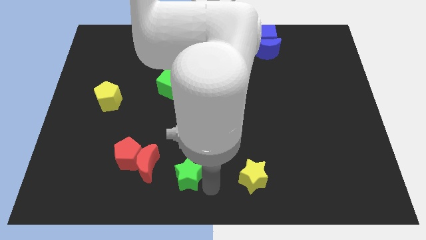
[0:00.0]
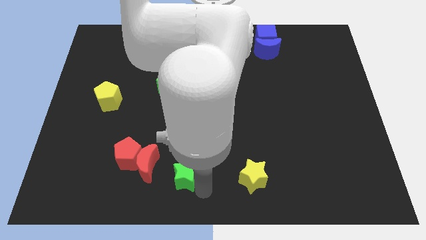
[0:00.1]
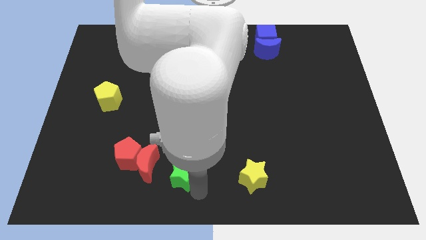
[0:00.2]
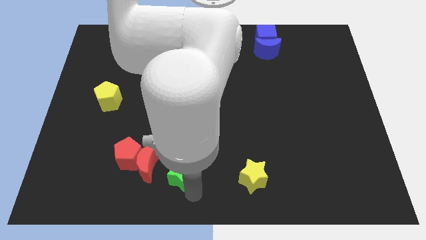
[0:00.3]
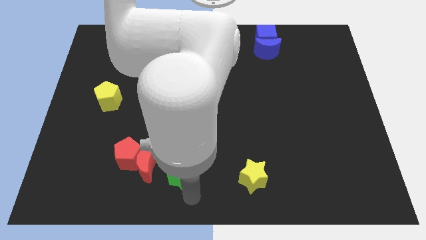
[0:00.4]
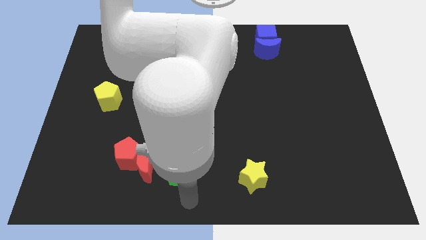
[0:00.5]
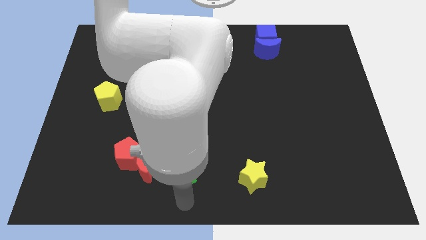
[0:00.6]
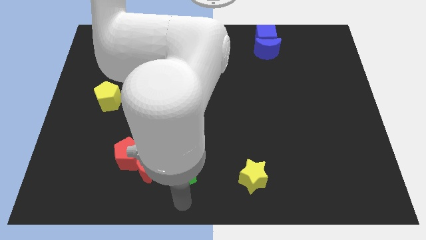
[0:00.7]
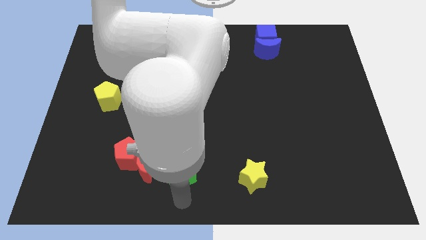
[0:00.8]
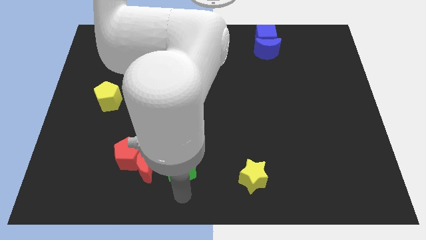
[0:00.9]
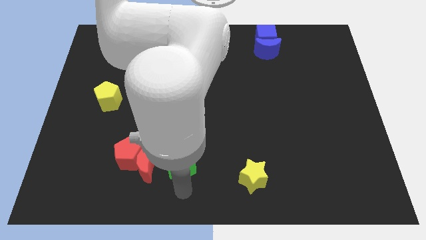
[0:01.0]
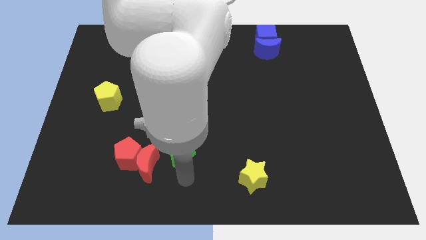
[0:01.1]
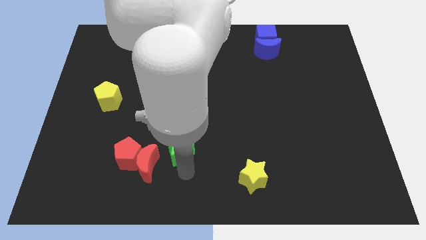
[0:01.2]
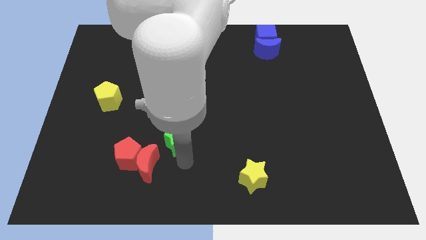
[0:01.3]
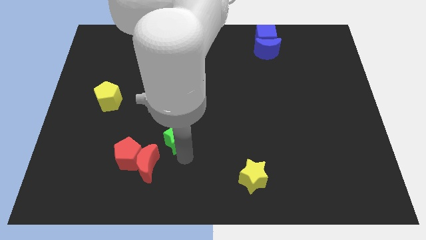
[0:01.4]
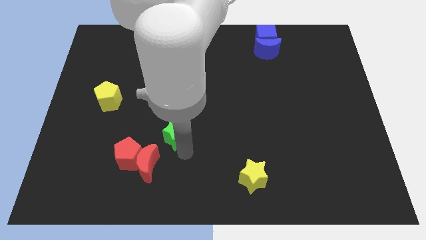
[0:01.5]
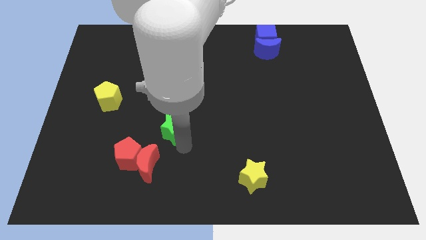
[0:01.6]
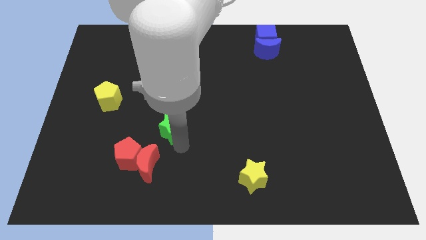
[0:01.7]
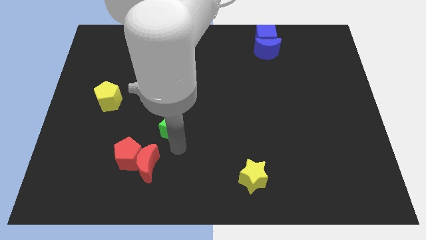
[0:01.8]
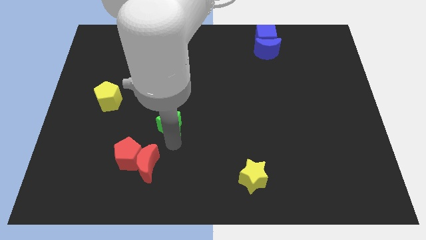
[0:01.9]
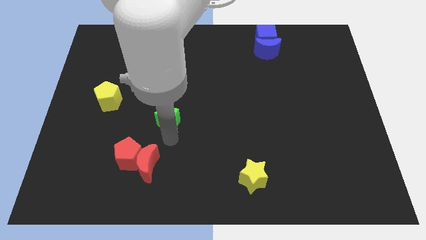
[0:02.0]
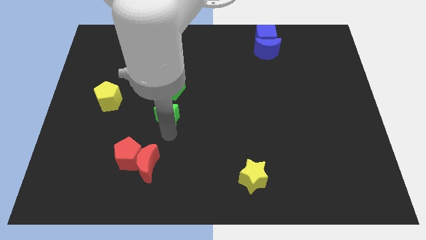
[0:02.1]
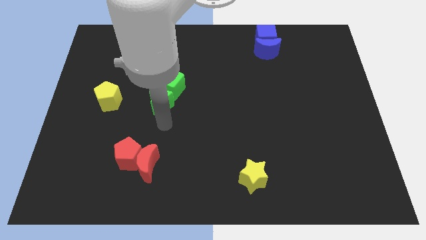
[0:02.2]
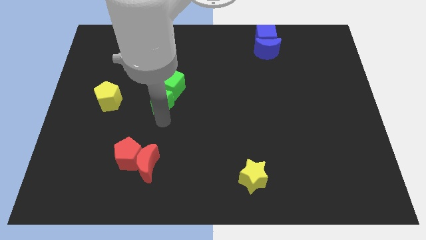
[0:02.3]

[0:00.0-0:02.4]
place the green star in between the green cube and red pentagon

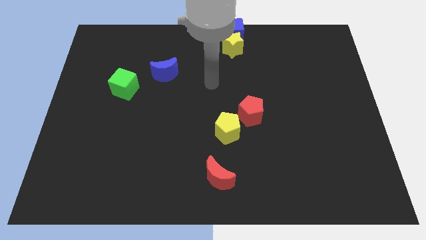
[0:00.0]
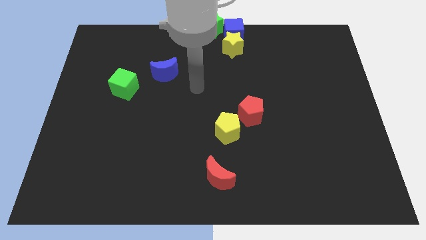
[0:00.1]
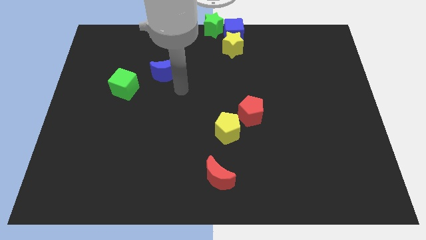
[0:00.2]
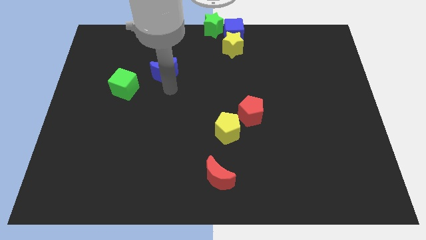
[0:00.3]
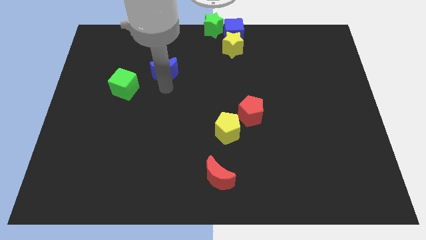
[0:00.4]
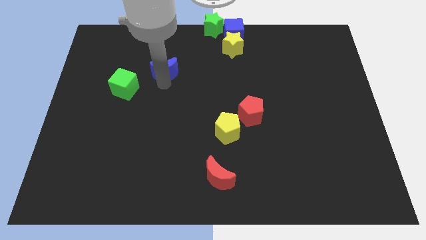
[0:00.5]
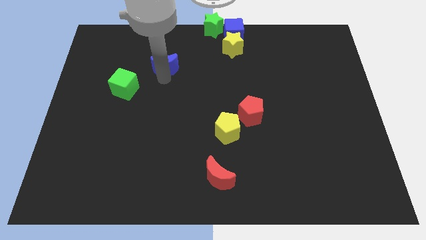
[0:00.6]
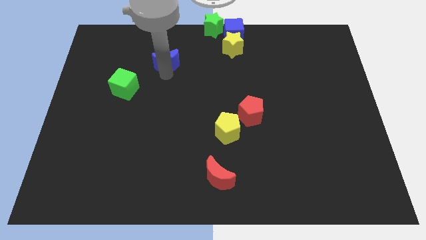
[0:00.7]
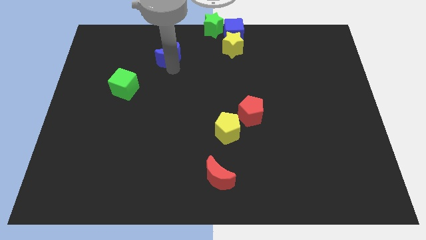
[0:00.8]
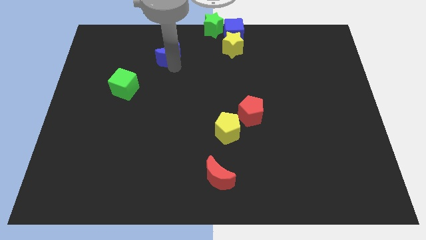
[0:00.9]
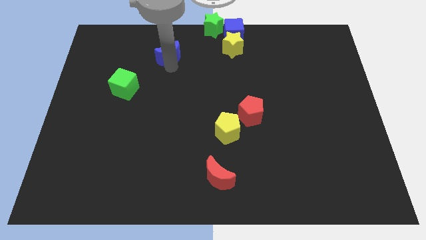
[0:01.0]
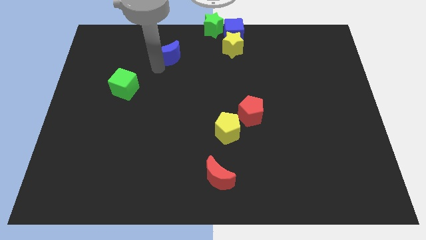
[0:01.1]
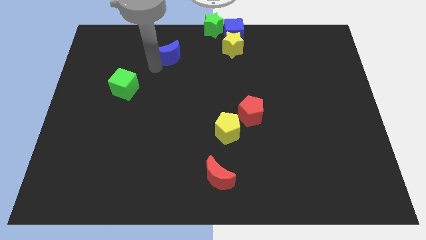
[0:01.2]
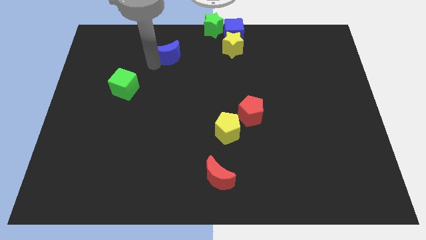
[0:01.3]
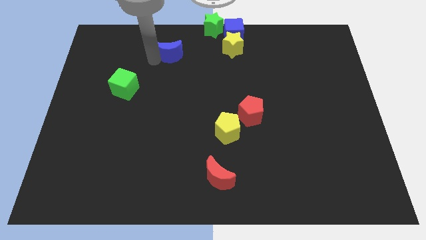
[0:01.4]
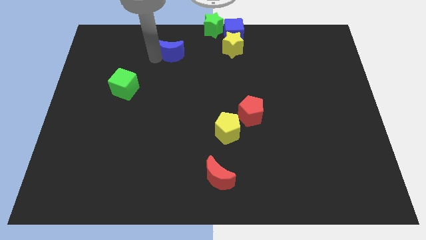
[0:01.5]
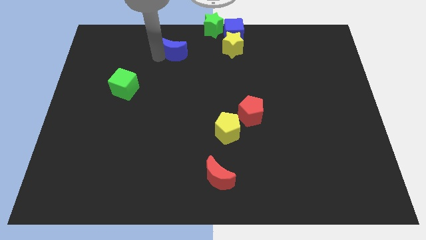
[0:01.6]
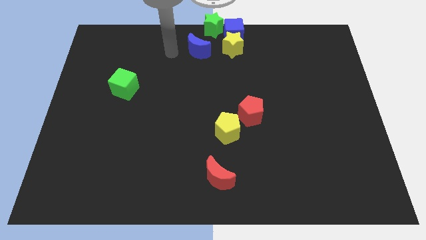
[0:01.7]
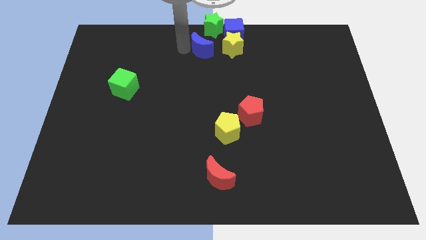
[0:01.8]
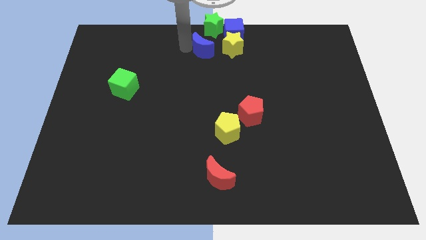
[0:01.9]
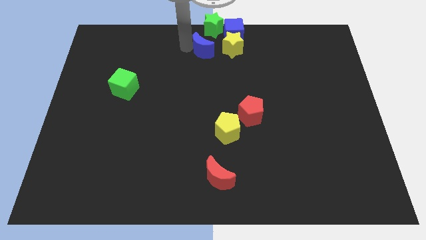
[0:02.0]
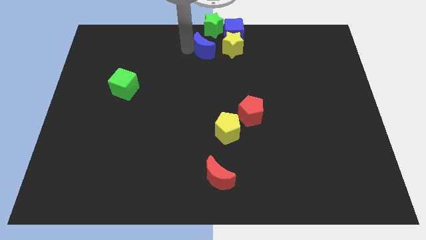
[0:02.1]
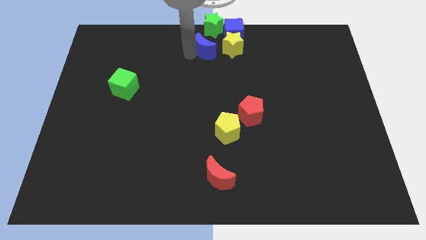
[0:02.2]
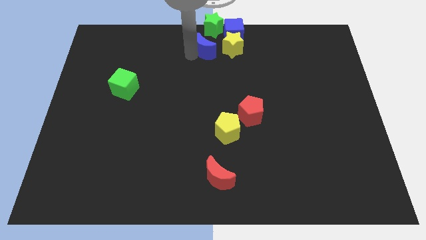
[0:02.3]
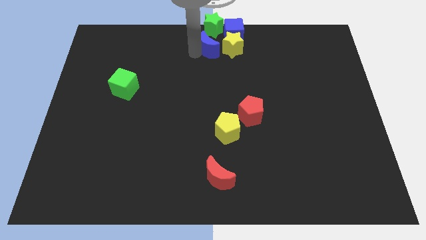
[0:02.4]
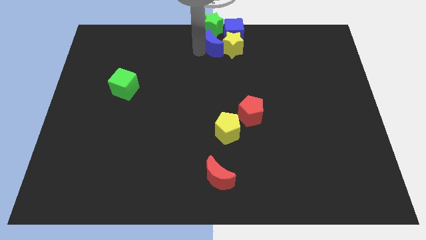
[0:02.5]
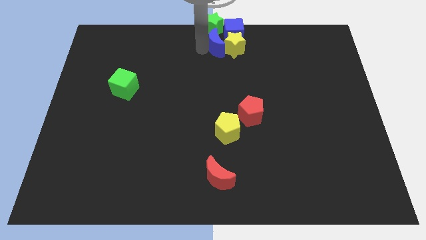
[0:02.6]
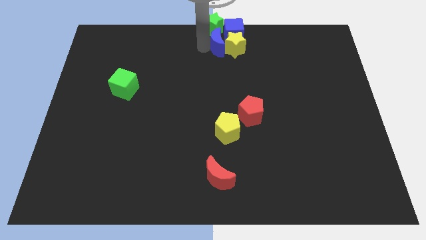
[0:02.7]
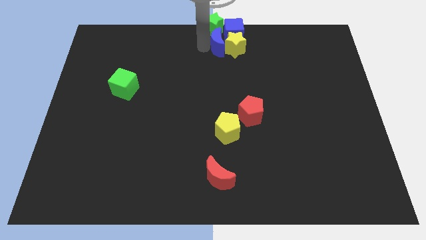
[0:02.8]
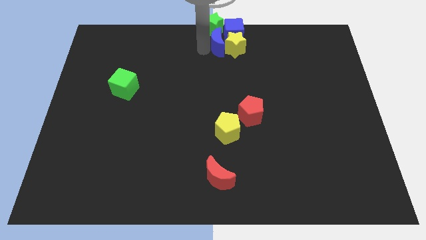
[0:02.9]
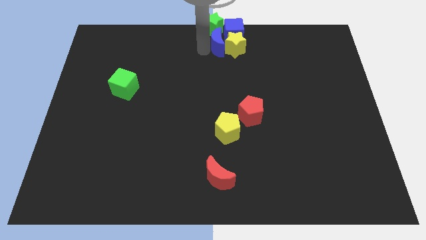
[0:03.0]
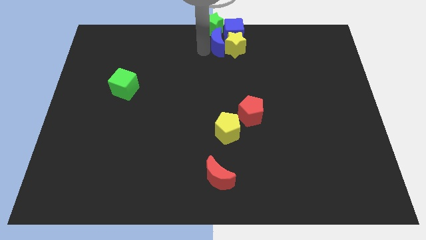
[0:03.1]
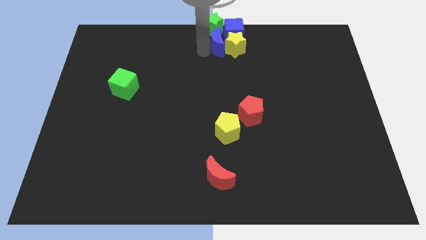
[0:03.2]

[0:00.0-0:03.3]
push the blue crescent into the yellow star towards the top center of the board

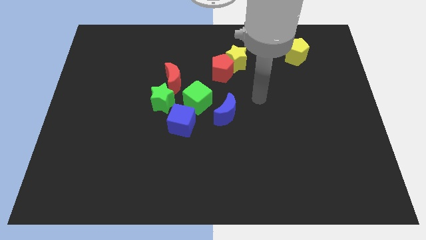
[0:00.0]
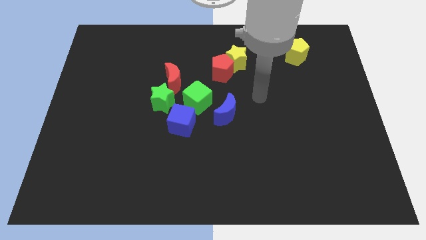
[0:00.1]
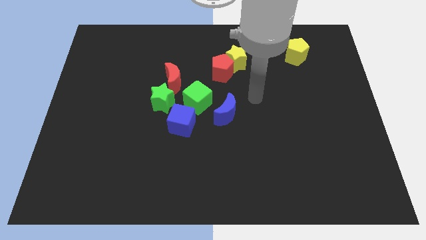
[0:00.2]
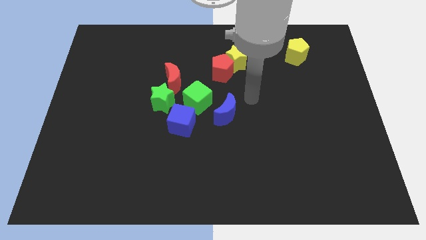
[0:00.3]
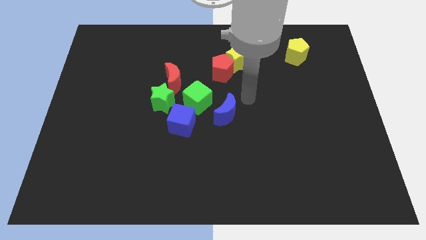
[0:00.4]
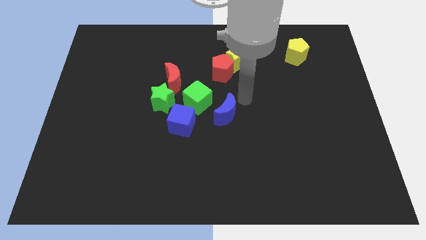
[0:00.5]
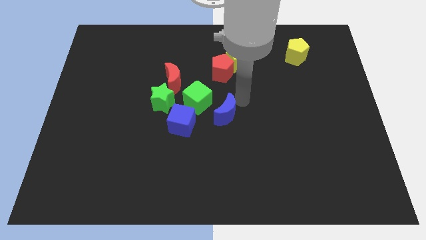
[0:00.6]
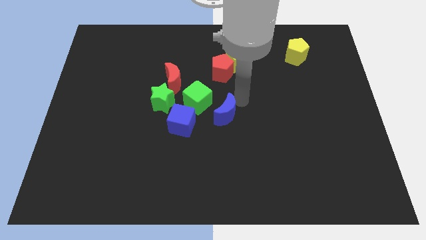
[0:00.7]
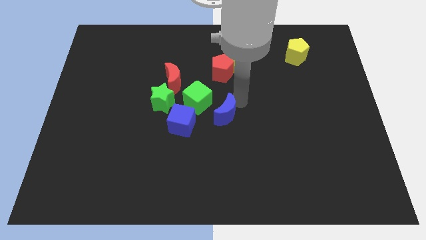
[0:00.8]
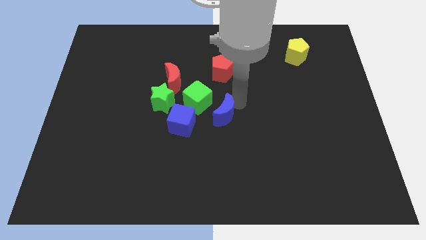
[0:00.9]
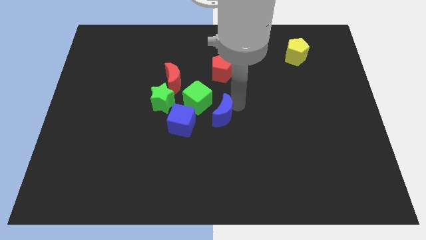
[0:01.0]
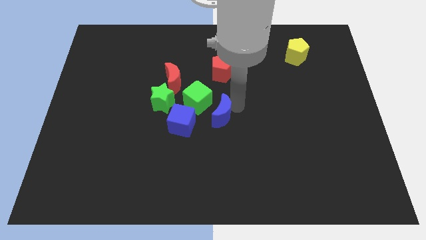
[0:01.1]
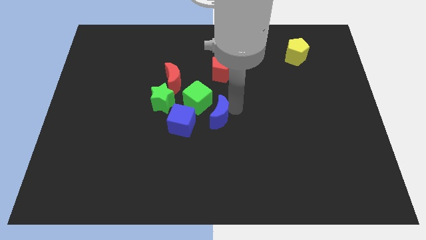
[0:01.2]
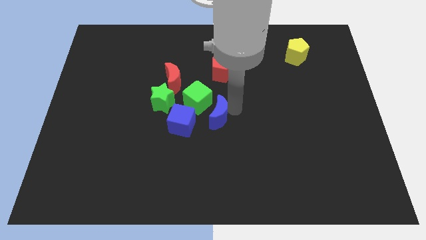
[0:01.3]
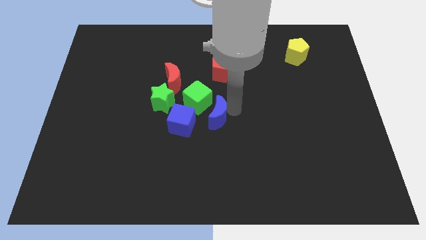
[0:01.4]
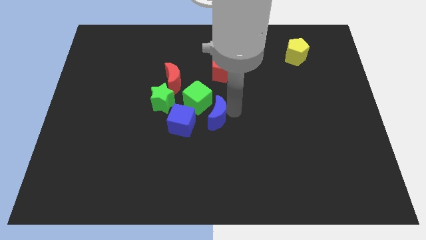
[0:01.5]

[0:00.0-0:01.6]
slightly move the blue crescent to the center of the board

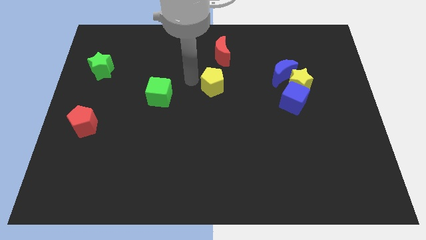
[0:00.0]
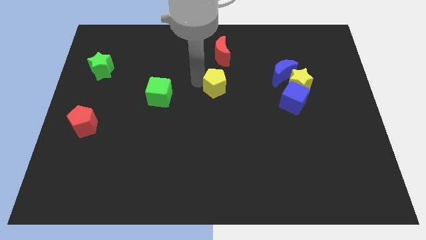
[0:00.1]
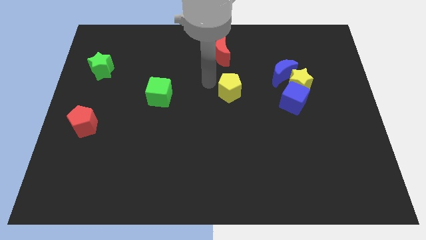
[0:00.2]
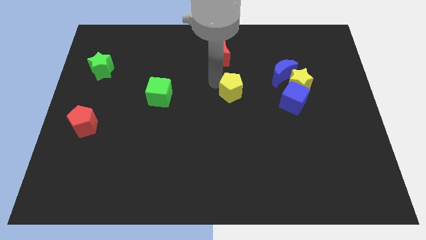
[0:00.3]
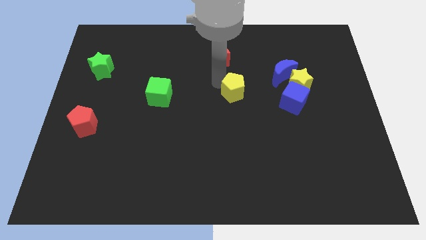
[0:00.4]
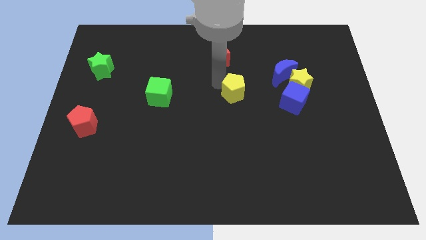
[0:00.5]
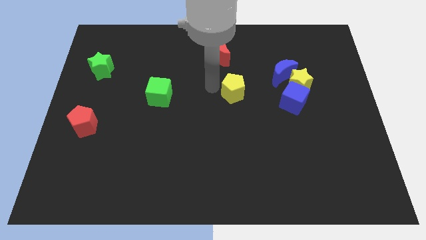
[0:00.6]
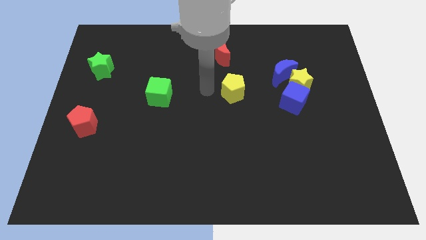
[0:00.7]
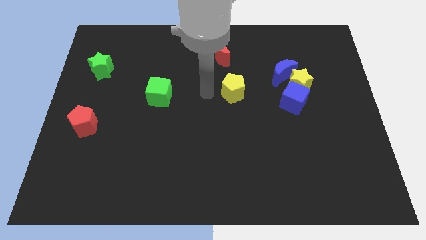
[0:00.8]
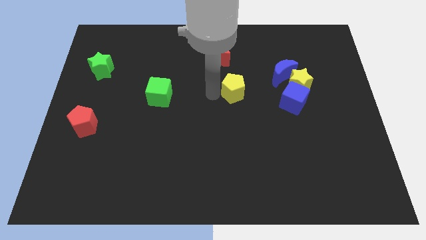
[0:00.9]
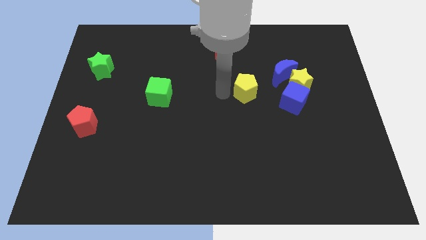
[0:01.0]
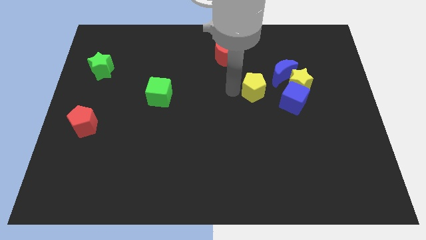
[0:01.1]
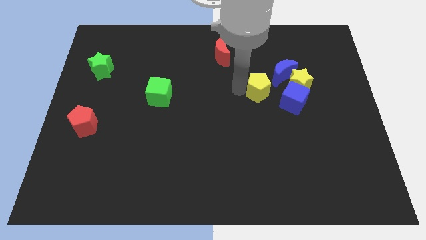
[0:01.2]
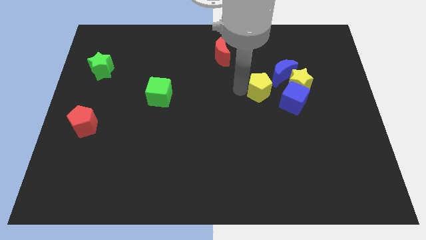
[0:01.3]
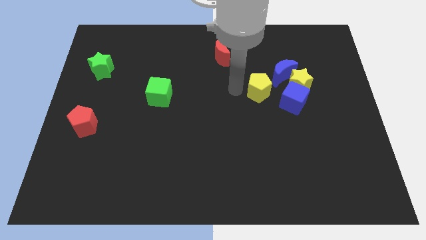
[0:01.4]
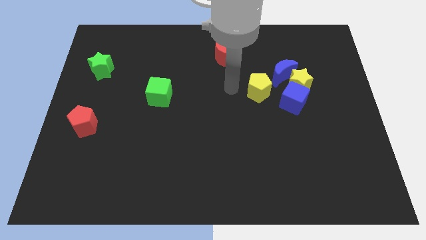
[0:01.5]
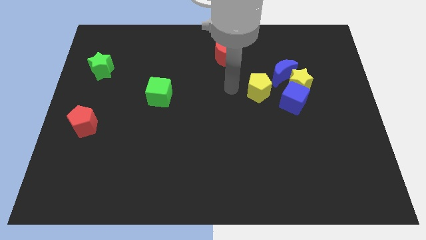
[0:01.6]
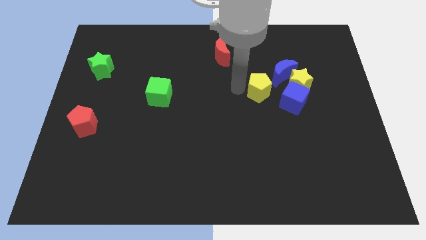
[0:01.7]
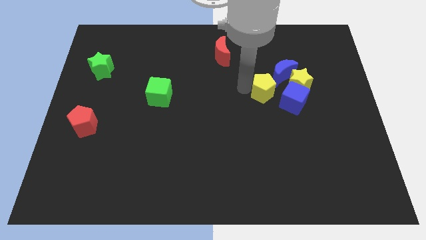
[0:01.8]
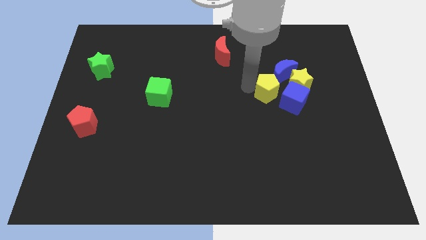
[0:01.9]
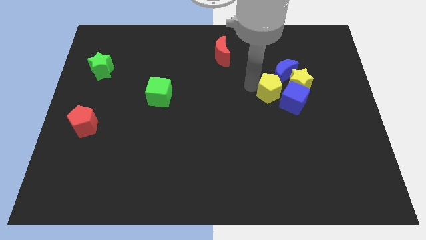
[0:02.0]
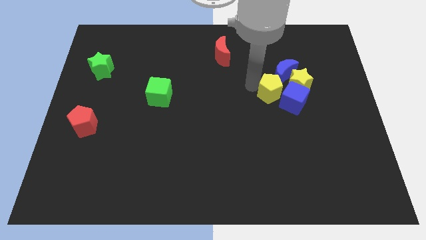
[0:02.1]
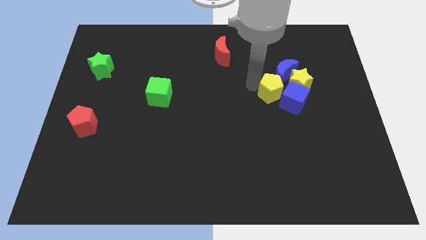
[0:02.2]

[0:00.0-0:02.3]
push the yellow pentagon into the blue moon
